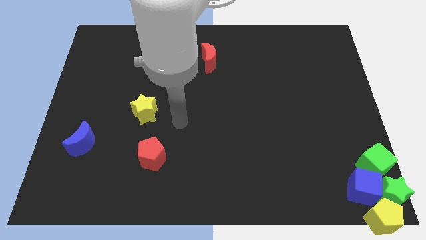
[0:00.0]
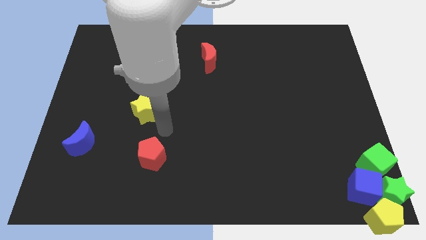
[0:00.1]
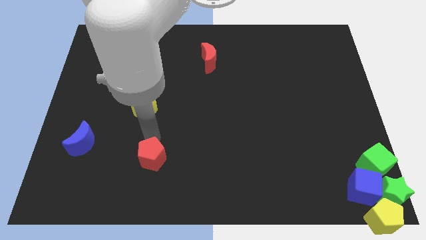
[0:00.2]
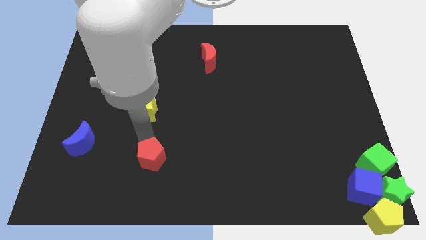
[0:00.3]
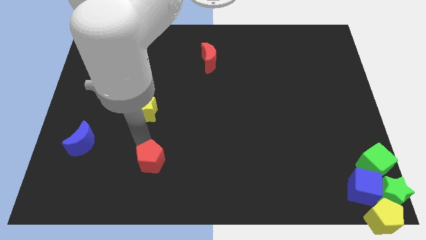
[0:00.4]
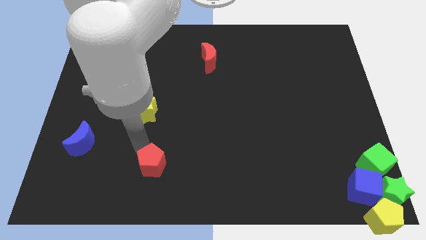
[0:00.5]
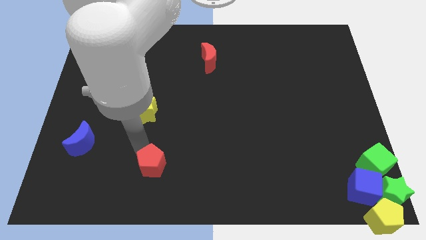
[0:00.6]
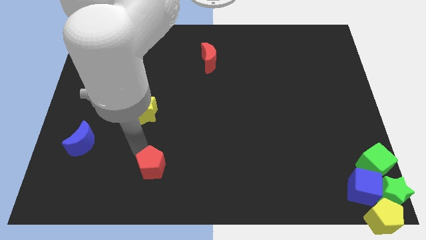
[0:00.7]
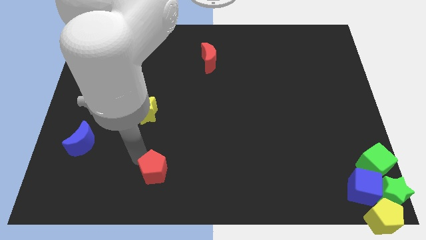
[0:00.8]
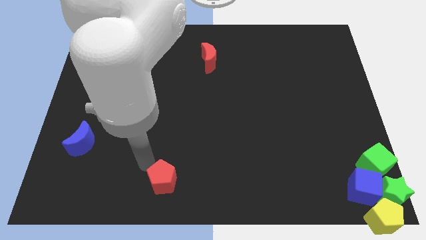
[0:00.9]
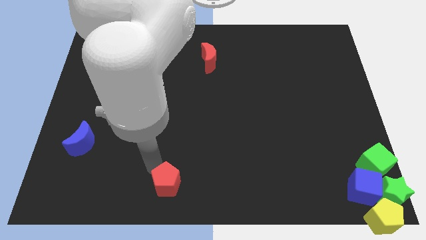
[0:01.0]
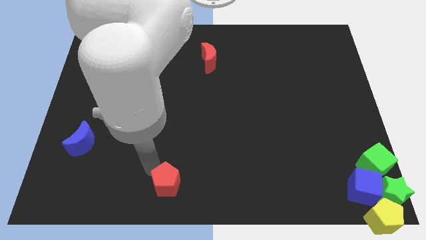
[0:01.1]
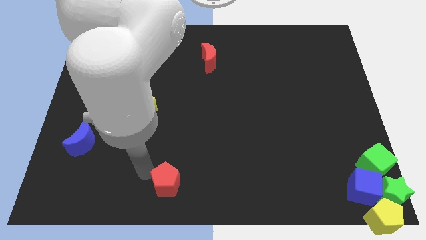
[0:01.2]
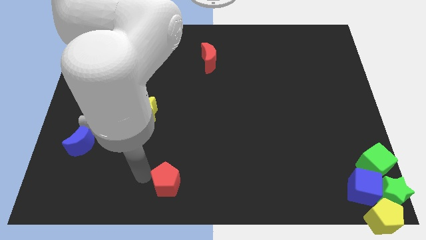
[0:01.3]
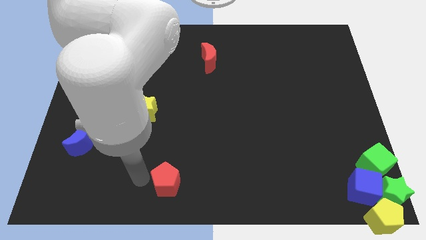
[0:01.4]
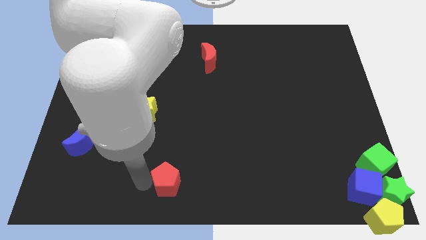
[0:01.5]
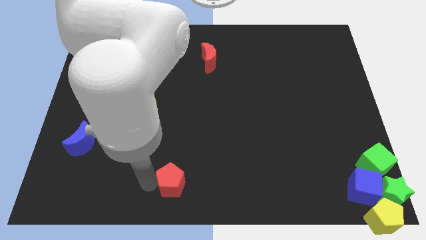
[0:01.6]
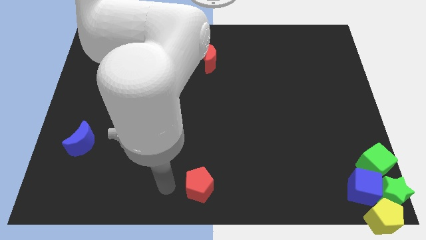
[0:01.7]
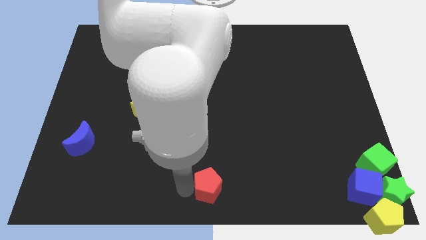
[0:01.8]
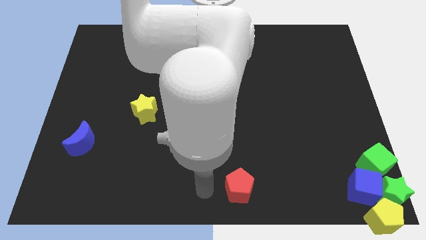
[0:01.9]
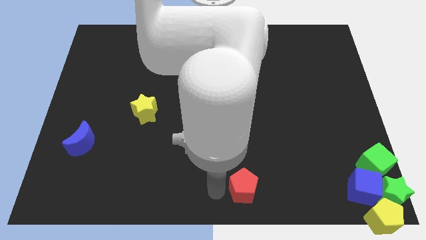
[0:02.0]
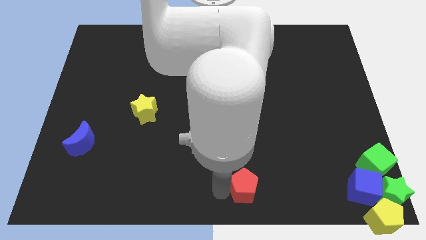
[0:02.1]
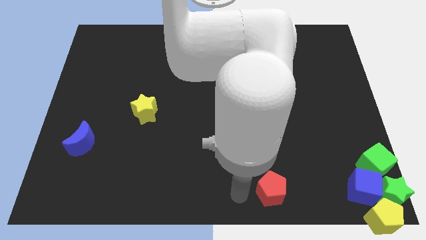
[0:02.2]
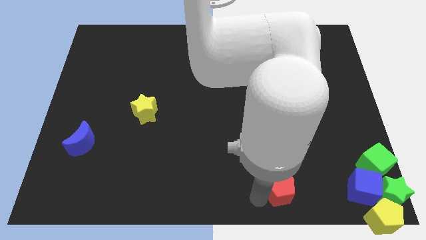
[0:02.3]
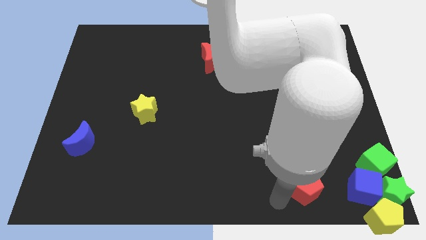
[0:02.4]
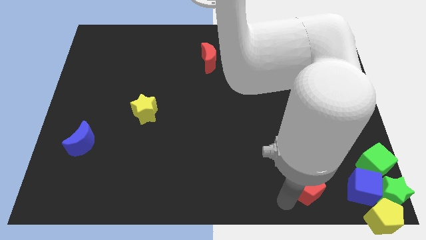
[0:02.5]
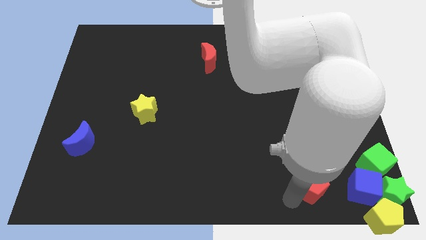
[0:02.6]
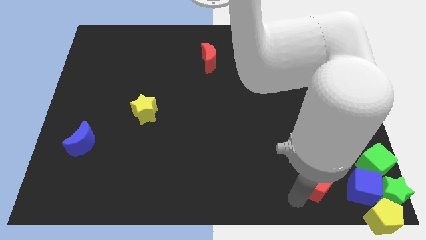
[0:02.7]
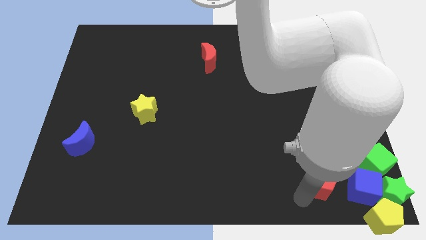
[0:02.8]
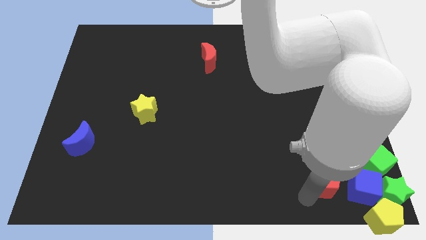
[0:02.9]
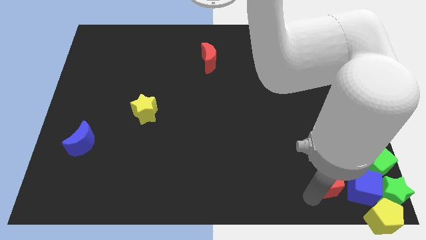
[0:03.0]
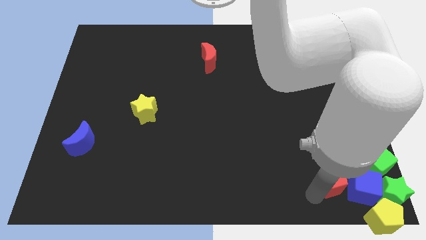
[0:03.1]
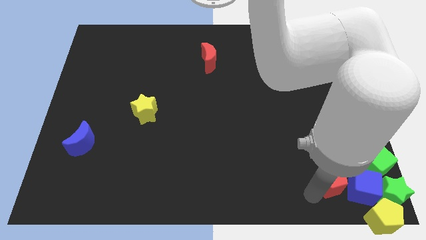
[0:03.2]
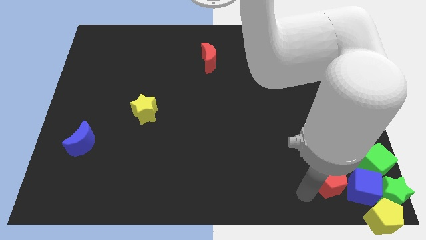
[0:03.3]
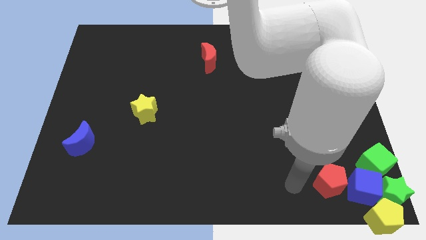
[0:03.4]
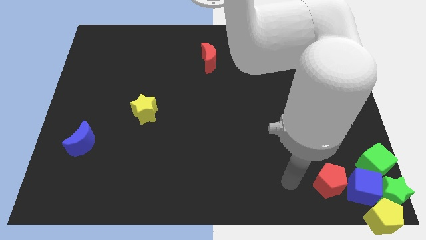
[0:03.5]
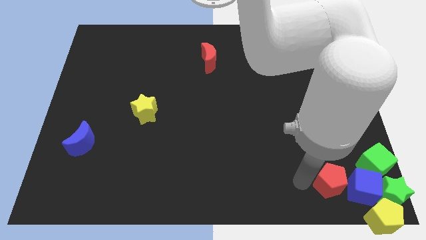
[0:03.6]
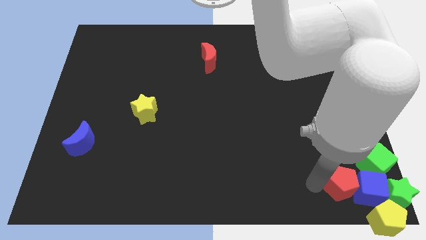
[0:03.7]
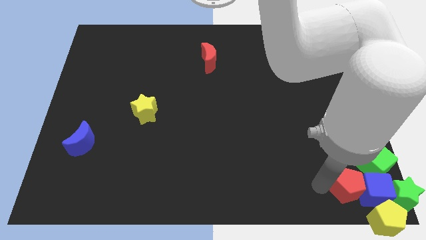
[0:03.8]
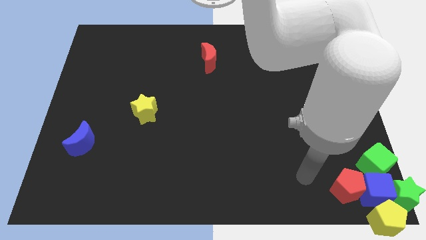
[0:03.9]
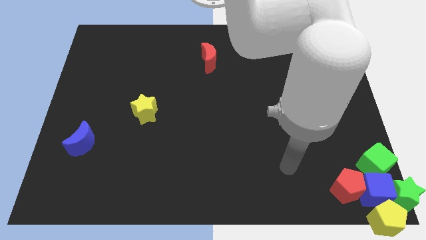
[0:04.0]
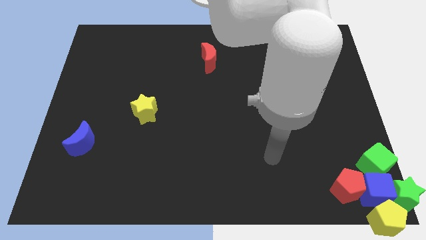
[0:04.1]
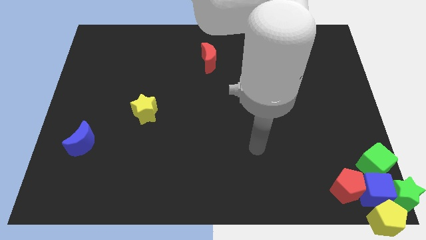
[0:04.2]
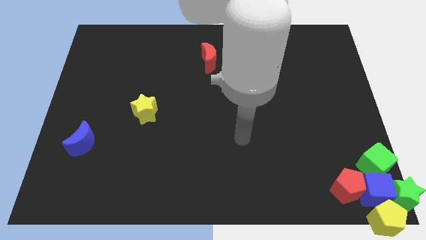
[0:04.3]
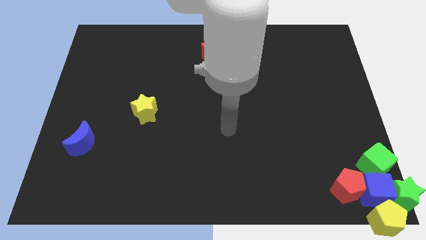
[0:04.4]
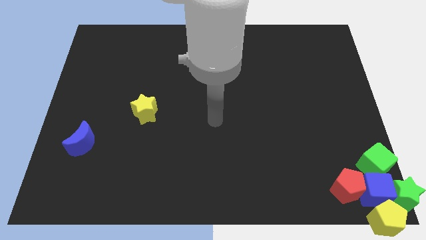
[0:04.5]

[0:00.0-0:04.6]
drag the red penatgon to left side of blue cube

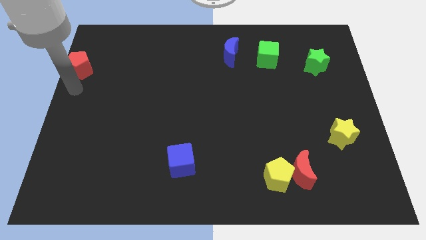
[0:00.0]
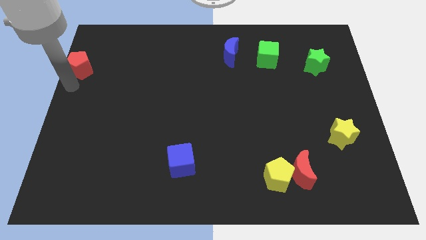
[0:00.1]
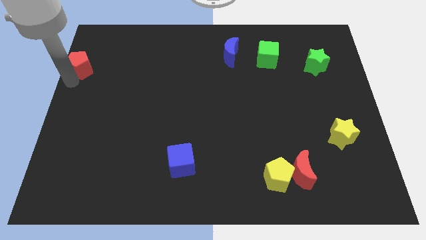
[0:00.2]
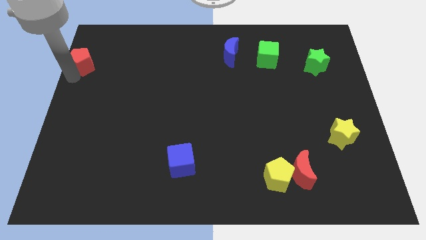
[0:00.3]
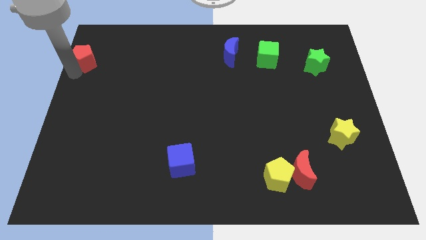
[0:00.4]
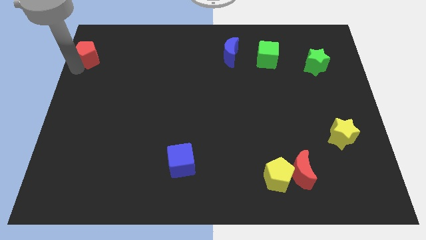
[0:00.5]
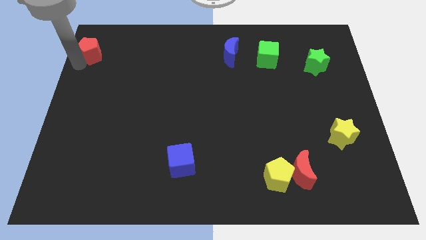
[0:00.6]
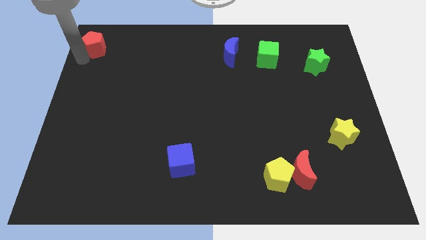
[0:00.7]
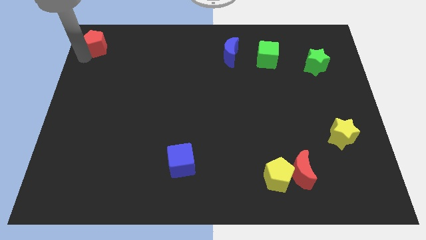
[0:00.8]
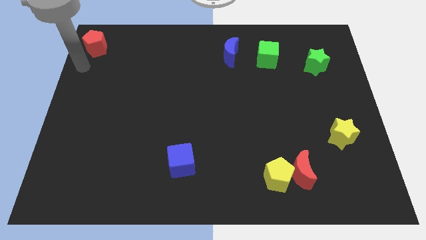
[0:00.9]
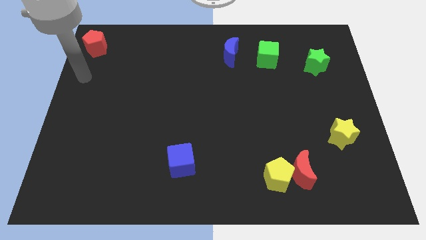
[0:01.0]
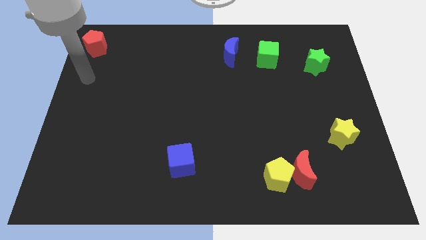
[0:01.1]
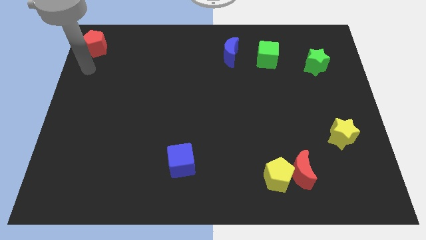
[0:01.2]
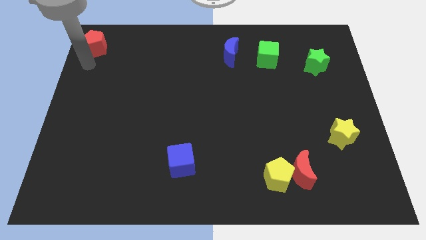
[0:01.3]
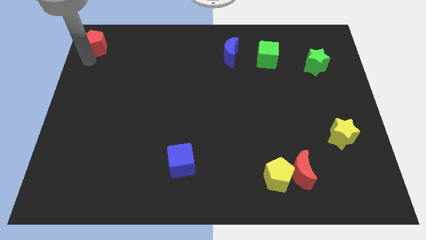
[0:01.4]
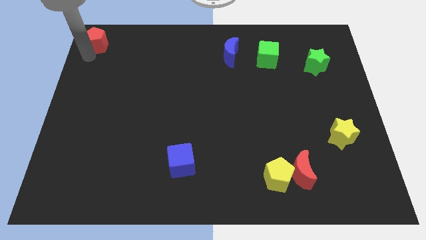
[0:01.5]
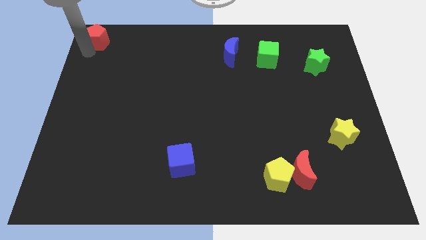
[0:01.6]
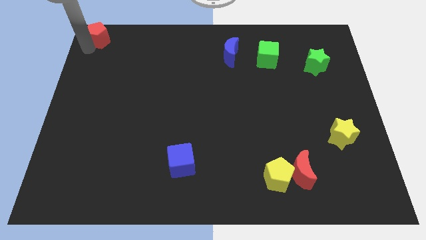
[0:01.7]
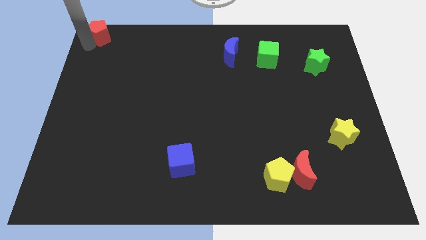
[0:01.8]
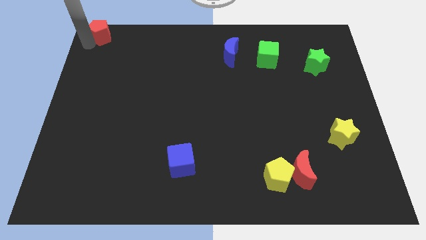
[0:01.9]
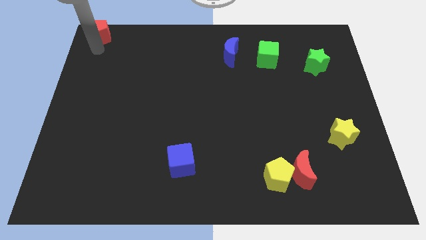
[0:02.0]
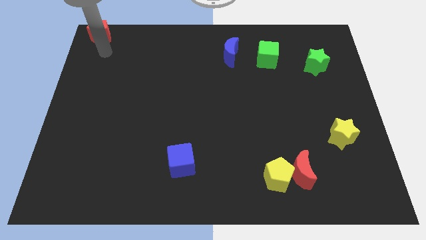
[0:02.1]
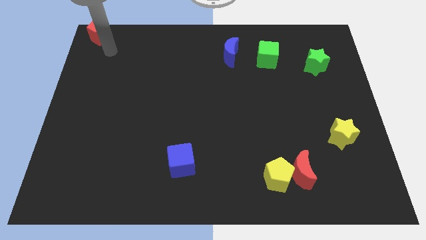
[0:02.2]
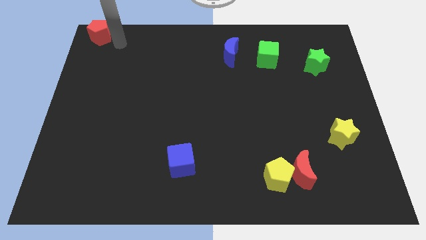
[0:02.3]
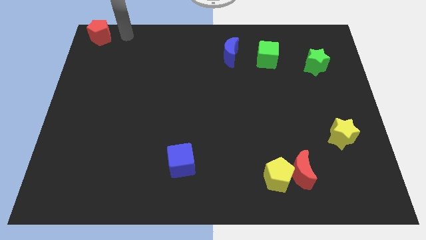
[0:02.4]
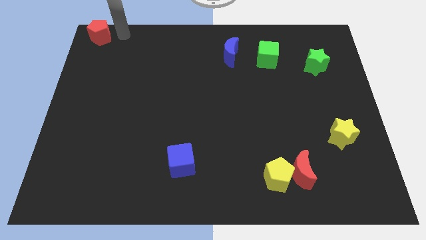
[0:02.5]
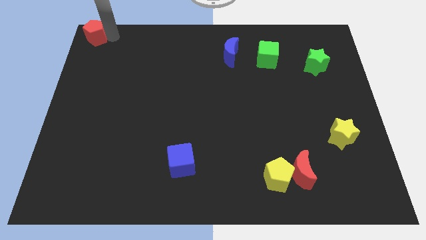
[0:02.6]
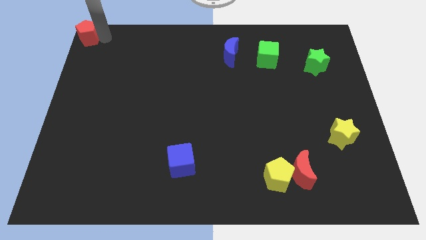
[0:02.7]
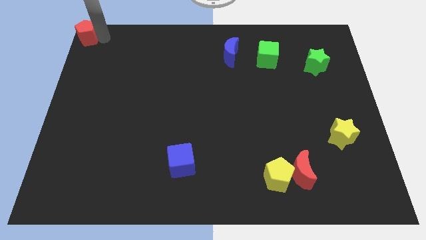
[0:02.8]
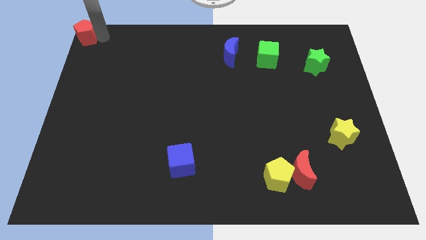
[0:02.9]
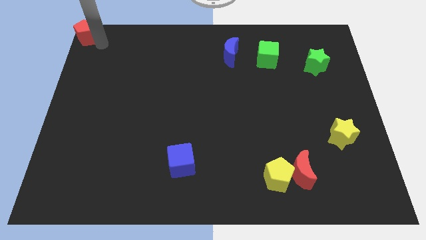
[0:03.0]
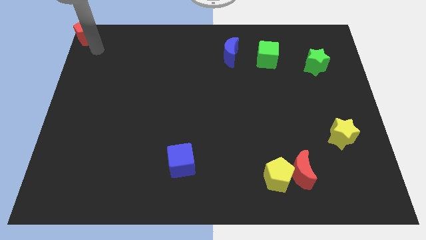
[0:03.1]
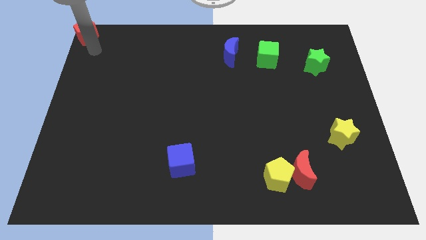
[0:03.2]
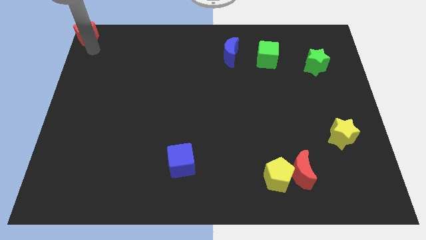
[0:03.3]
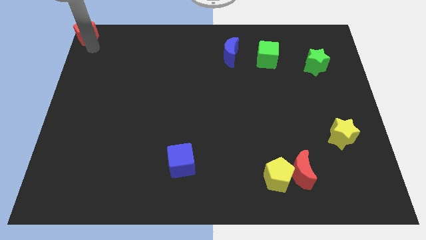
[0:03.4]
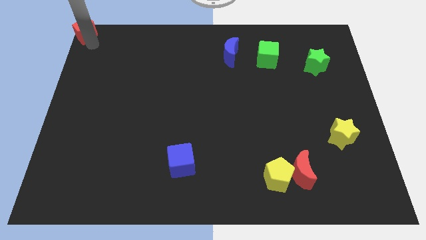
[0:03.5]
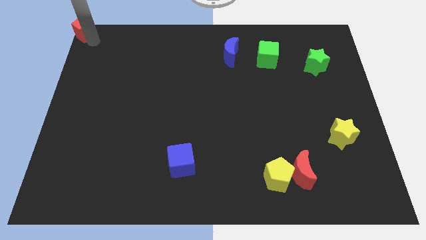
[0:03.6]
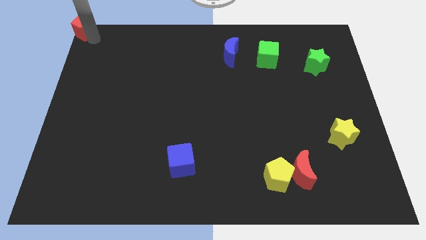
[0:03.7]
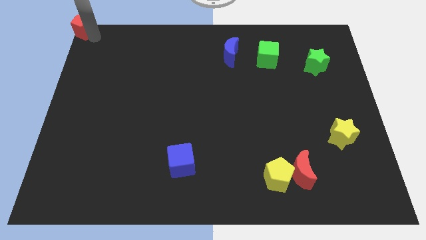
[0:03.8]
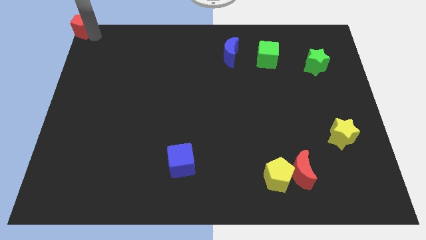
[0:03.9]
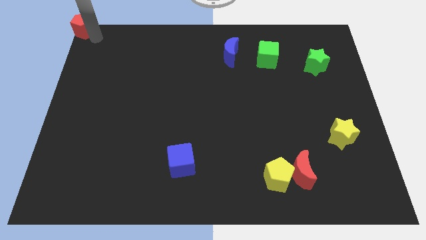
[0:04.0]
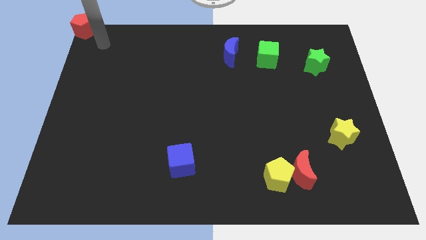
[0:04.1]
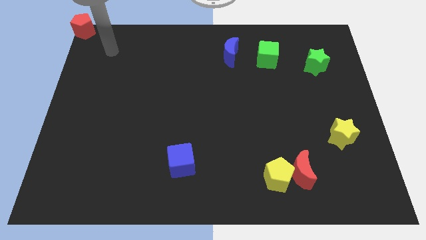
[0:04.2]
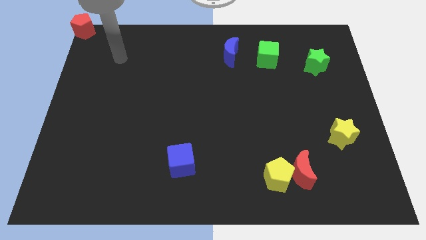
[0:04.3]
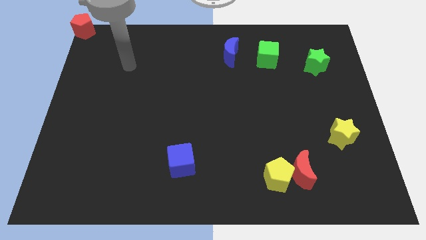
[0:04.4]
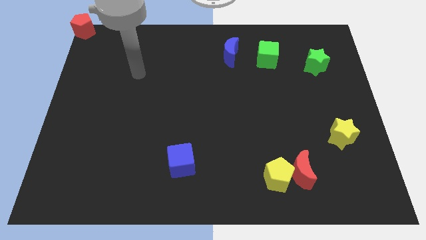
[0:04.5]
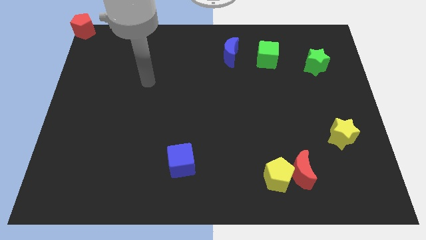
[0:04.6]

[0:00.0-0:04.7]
push the red pentagon to the top left corner
